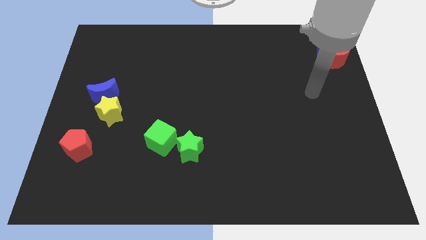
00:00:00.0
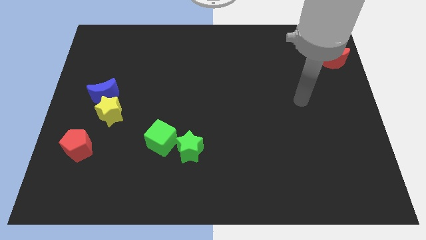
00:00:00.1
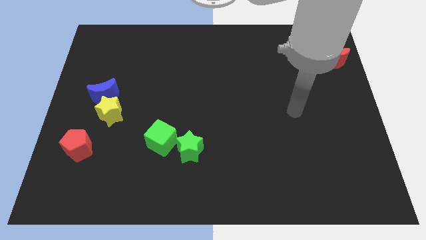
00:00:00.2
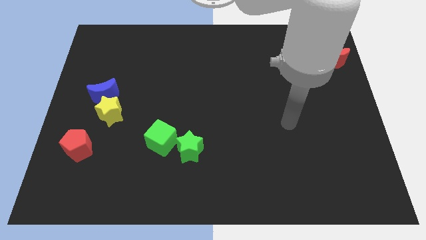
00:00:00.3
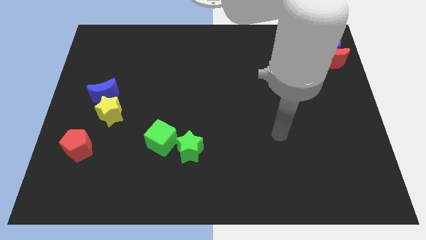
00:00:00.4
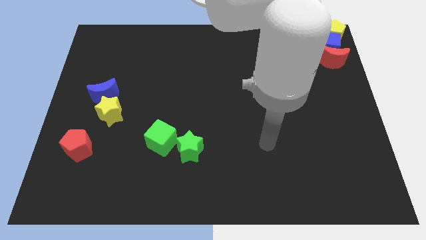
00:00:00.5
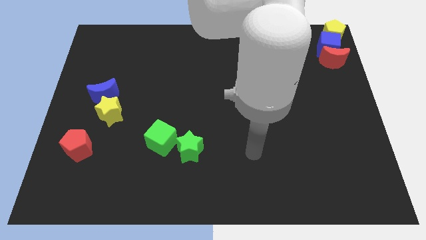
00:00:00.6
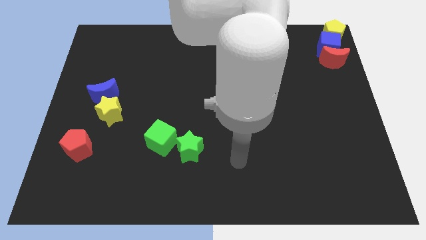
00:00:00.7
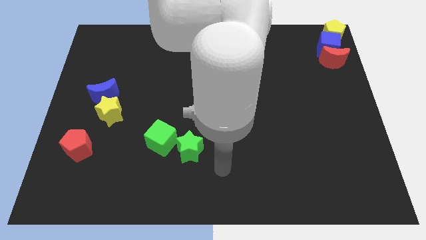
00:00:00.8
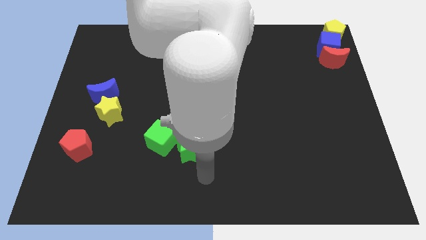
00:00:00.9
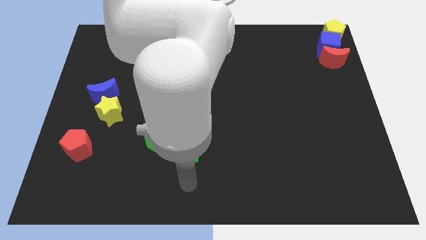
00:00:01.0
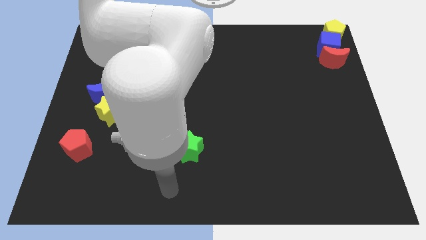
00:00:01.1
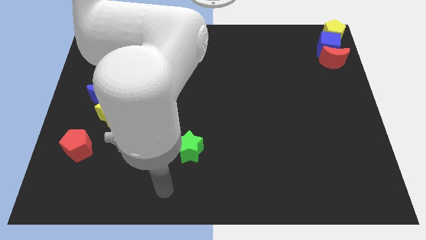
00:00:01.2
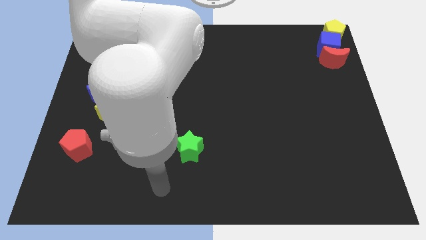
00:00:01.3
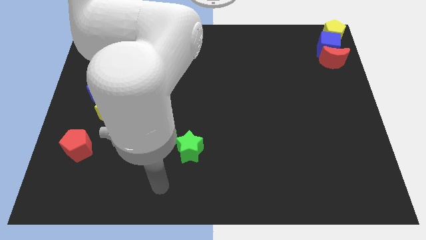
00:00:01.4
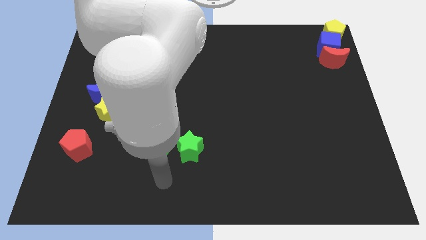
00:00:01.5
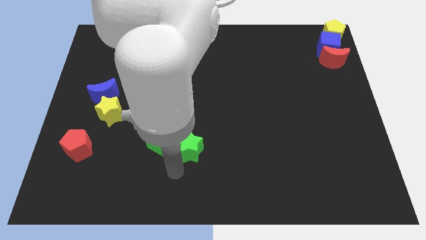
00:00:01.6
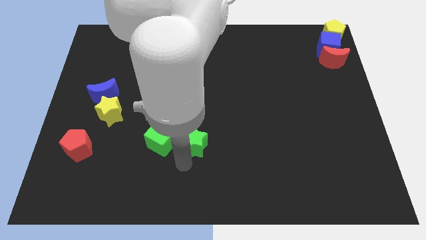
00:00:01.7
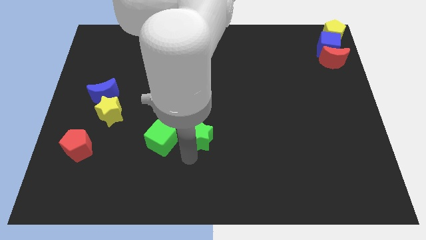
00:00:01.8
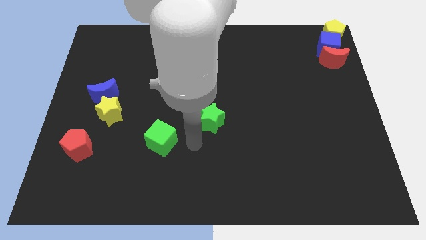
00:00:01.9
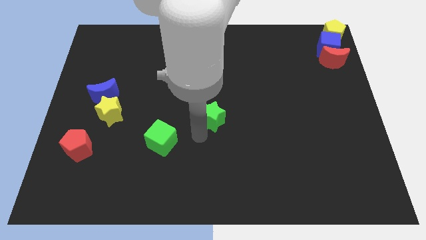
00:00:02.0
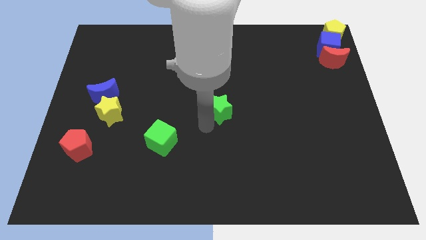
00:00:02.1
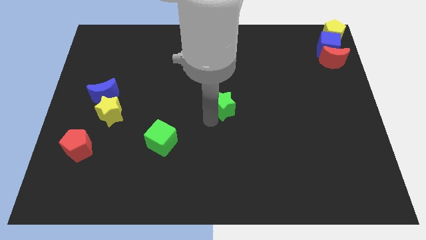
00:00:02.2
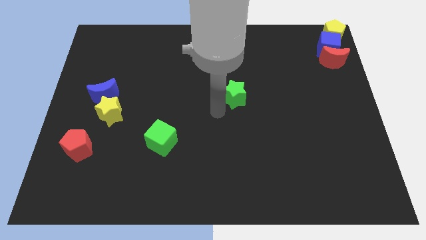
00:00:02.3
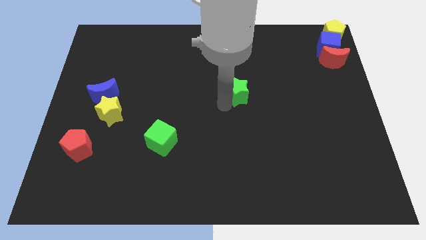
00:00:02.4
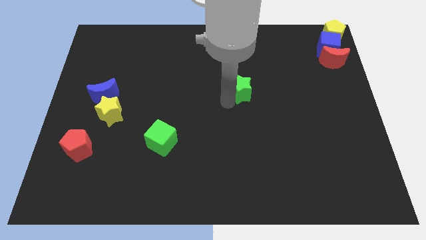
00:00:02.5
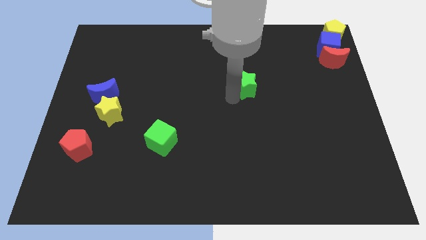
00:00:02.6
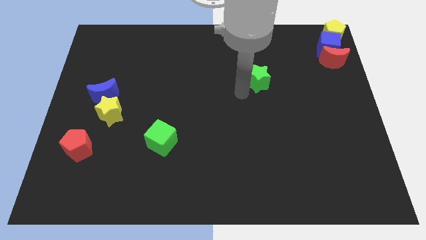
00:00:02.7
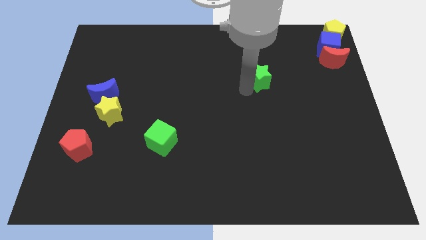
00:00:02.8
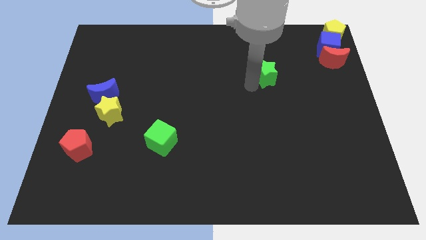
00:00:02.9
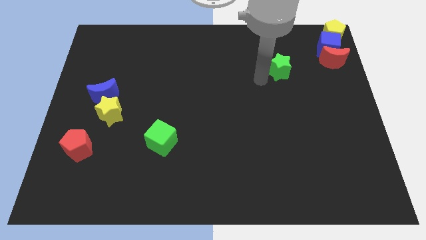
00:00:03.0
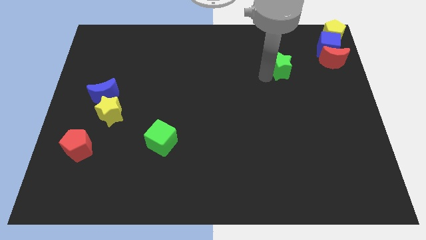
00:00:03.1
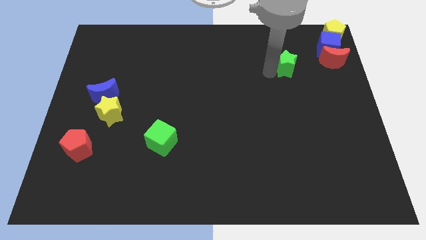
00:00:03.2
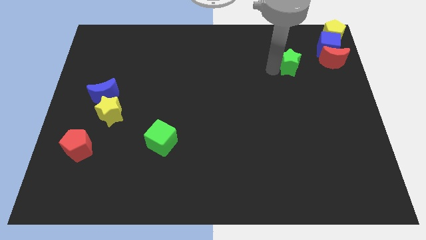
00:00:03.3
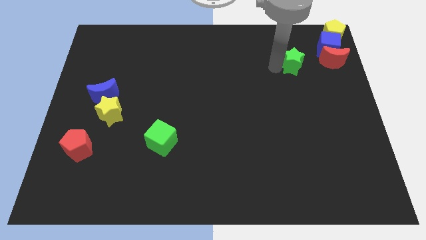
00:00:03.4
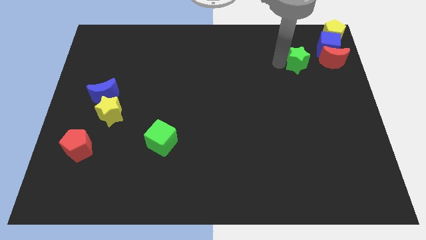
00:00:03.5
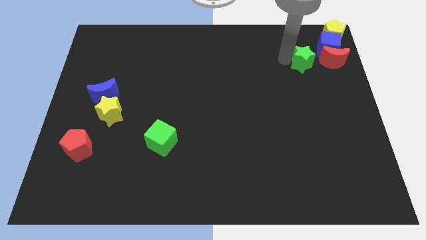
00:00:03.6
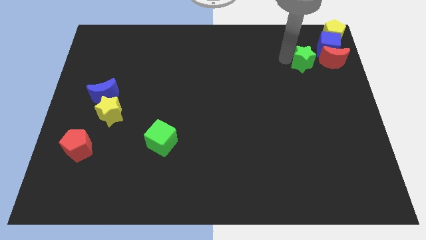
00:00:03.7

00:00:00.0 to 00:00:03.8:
push the green star to the left of the red crescent

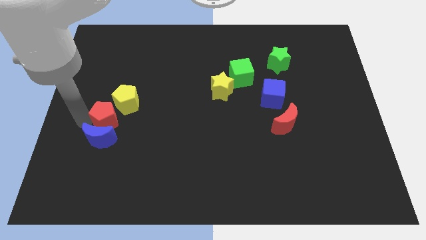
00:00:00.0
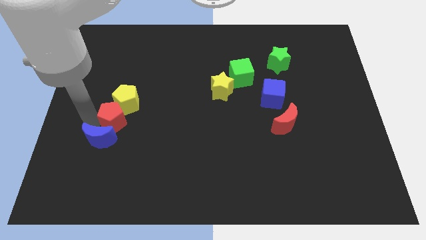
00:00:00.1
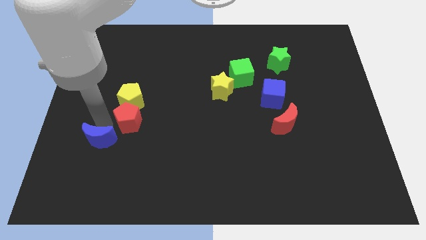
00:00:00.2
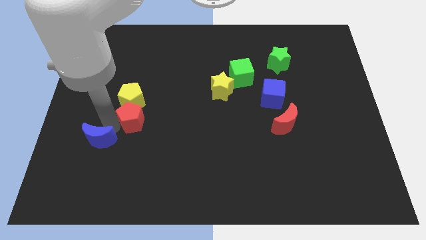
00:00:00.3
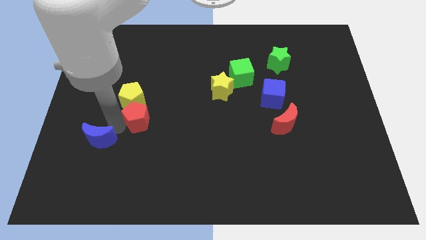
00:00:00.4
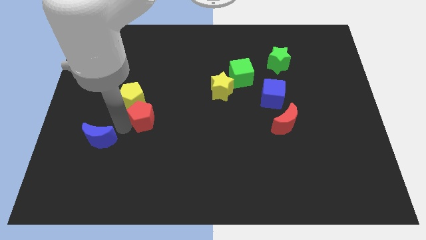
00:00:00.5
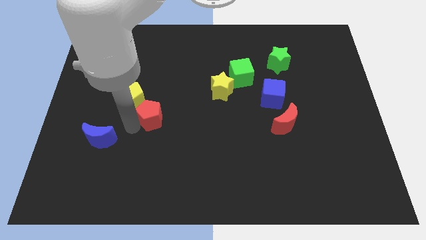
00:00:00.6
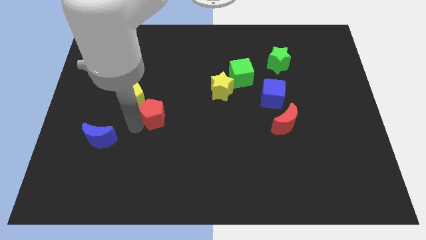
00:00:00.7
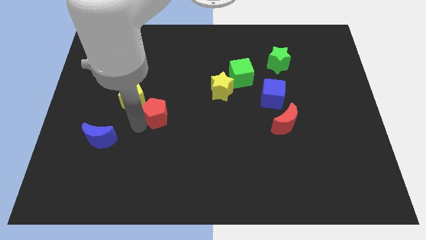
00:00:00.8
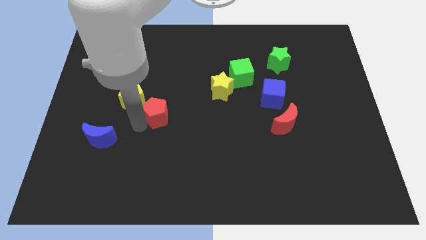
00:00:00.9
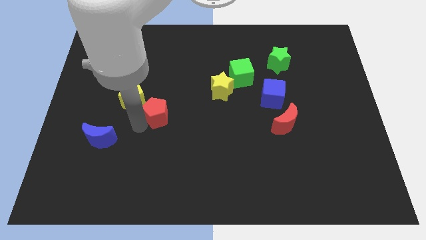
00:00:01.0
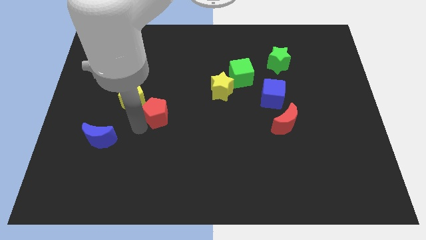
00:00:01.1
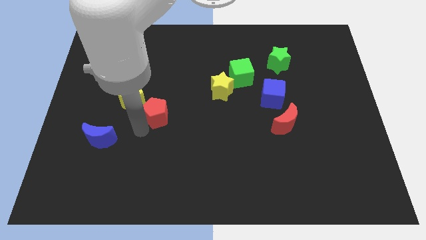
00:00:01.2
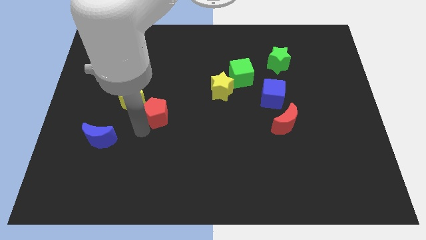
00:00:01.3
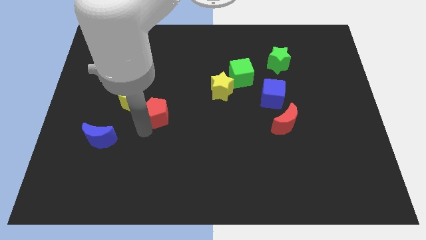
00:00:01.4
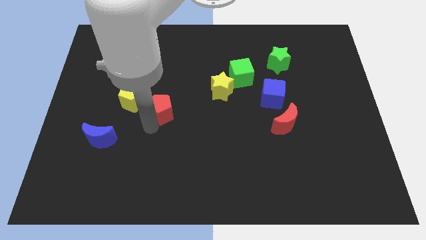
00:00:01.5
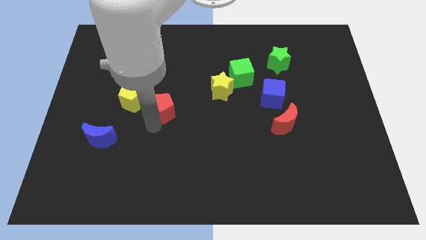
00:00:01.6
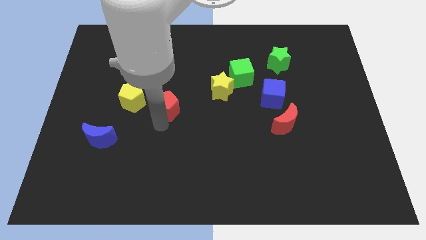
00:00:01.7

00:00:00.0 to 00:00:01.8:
move the red pentagon to the right of the yellow pentgaon

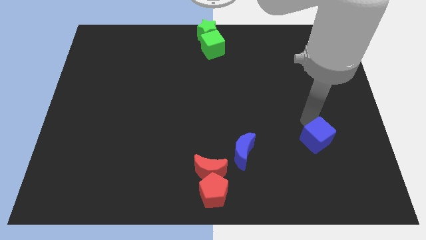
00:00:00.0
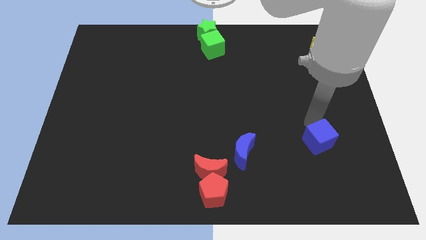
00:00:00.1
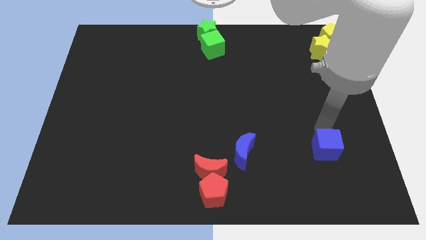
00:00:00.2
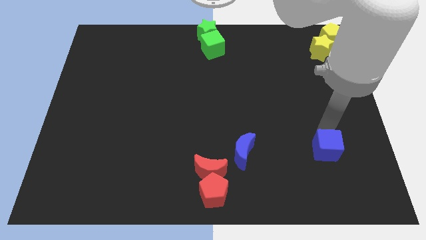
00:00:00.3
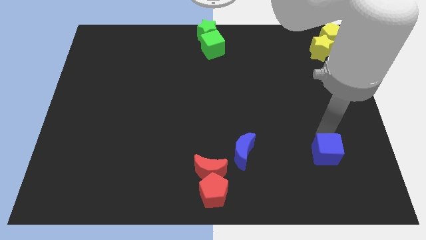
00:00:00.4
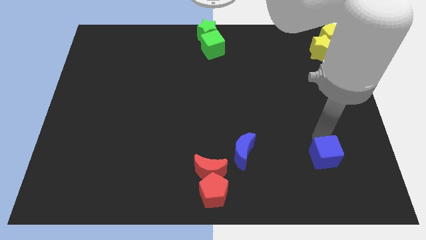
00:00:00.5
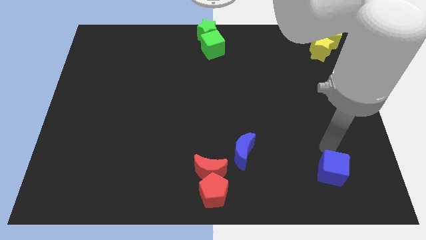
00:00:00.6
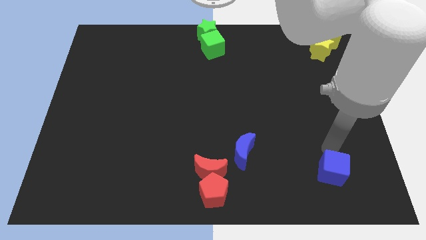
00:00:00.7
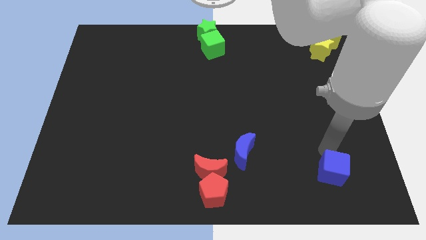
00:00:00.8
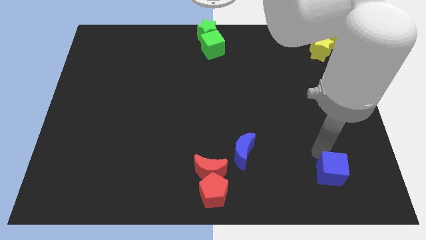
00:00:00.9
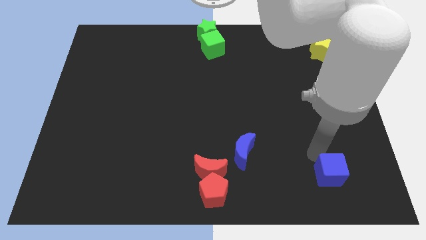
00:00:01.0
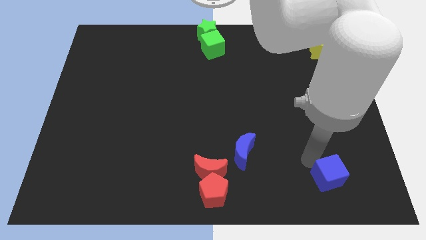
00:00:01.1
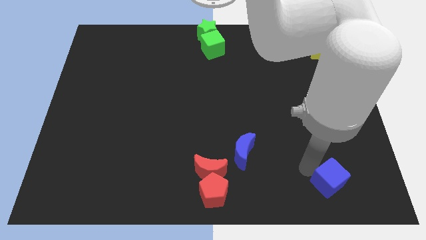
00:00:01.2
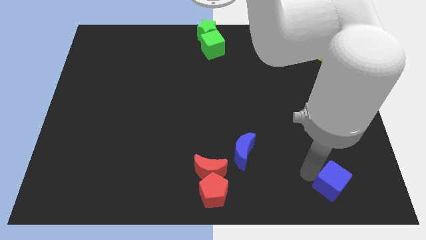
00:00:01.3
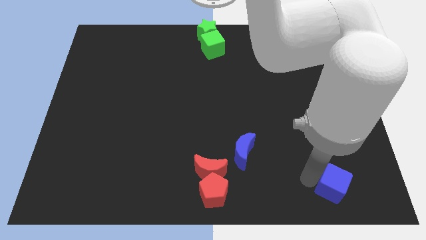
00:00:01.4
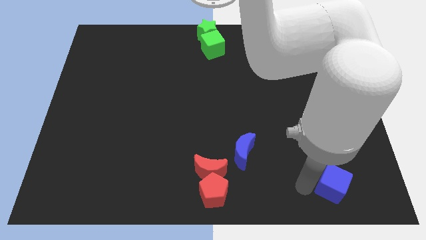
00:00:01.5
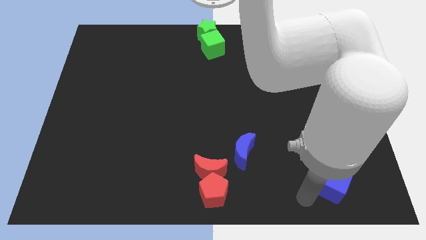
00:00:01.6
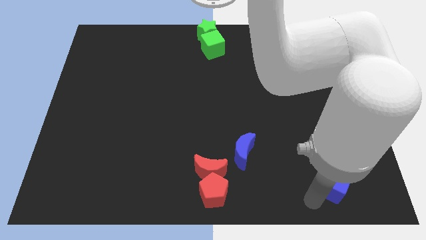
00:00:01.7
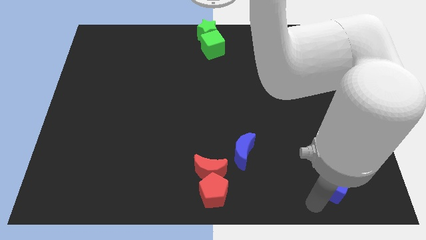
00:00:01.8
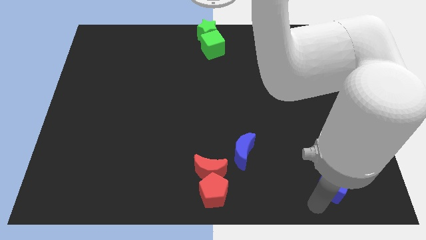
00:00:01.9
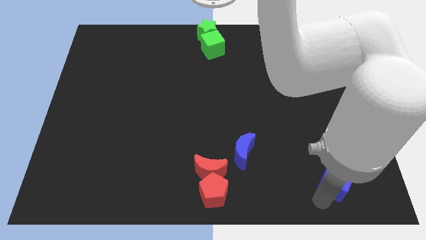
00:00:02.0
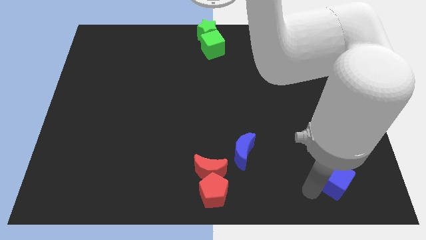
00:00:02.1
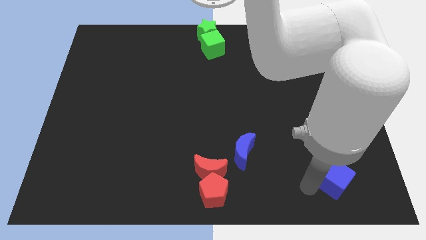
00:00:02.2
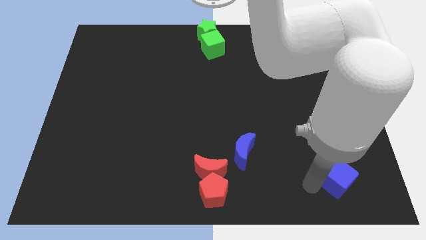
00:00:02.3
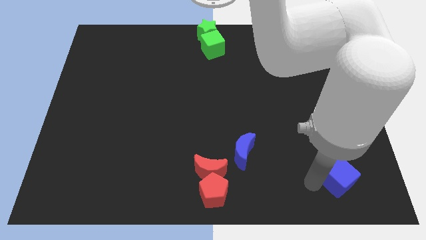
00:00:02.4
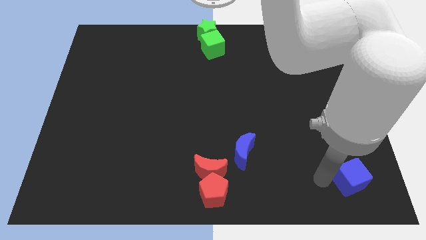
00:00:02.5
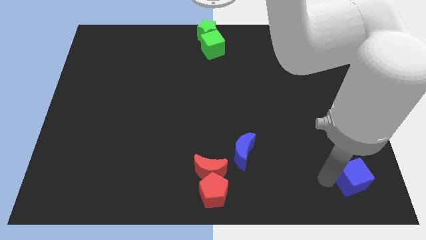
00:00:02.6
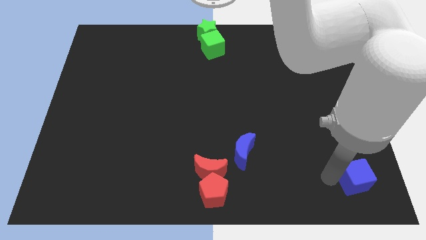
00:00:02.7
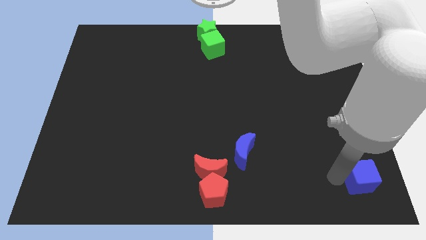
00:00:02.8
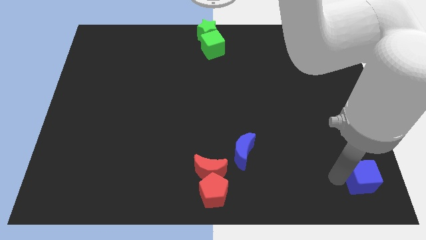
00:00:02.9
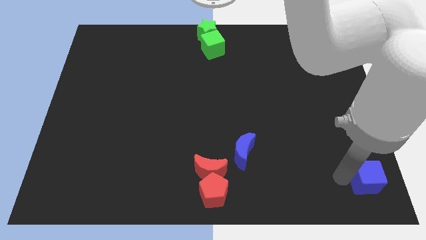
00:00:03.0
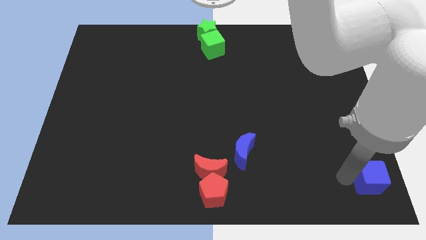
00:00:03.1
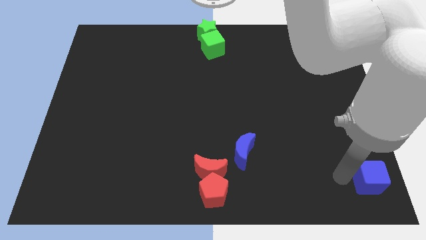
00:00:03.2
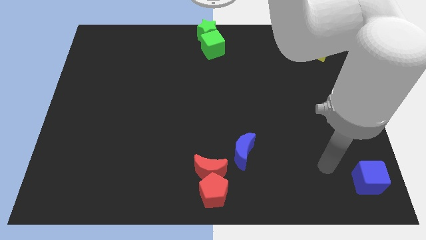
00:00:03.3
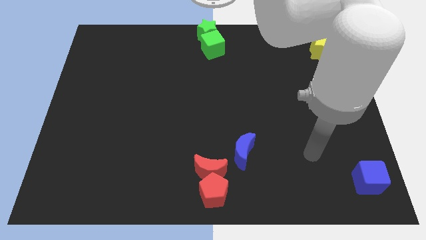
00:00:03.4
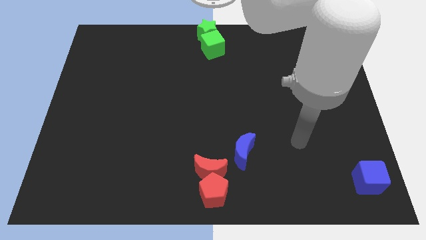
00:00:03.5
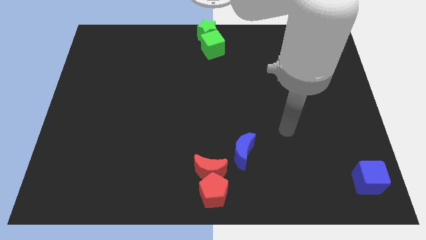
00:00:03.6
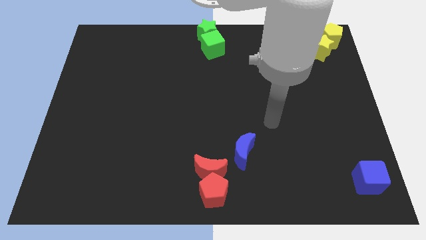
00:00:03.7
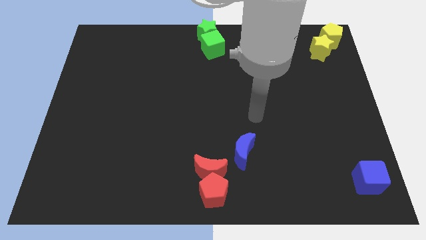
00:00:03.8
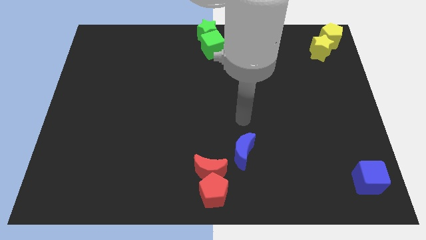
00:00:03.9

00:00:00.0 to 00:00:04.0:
place the blue cube at the right side of the group of red blocks
